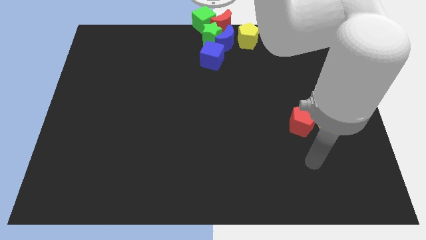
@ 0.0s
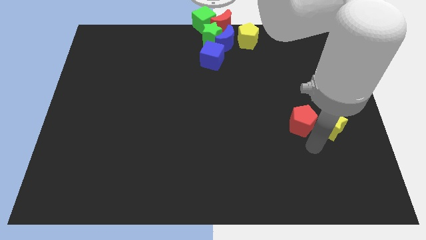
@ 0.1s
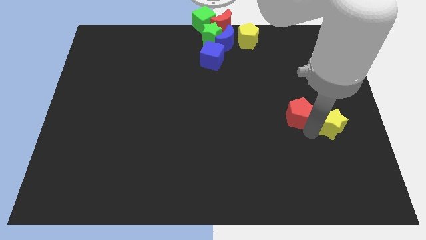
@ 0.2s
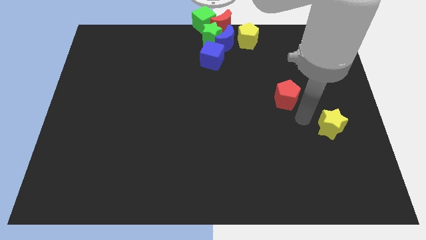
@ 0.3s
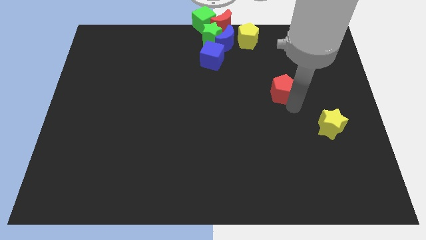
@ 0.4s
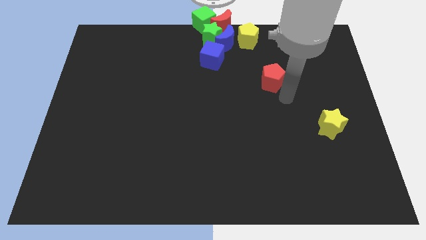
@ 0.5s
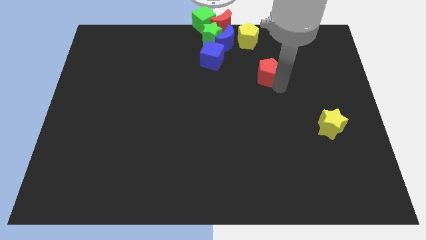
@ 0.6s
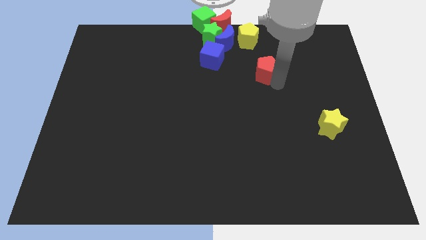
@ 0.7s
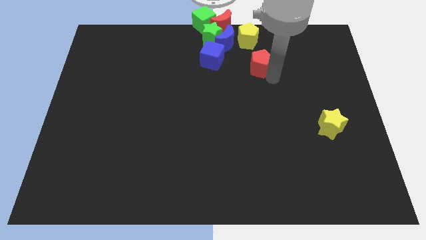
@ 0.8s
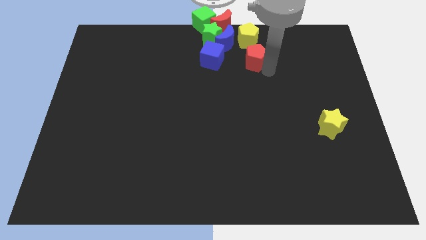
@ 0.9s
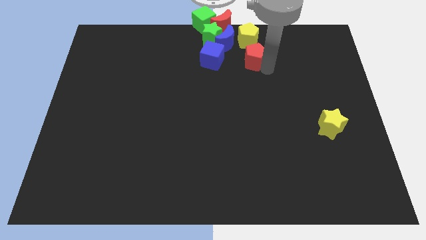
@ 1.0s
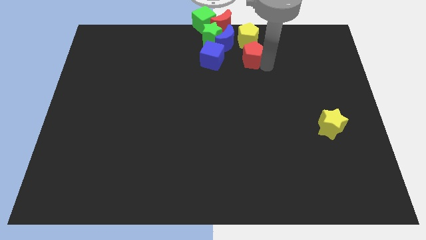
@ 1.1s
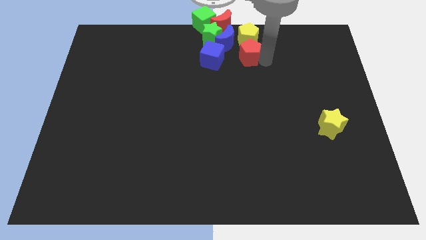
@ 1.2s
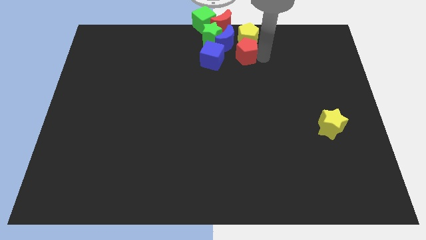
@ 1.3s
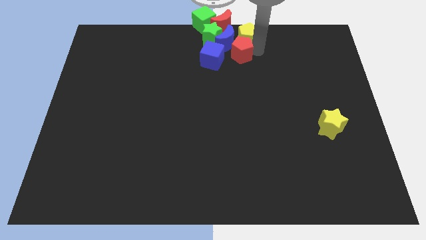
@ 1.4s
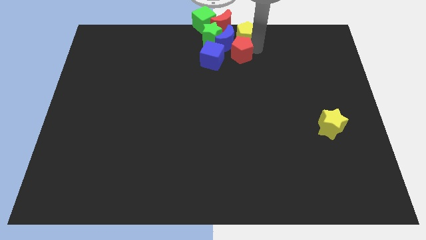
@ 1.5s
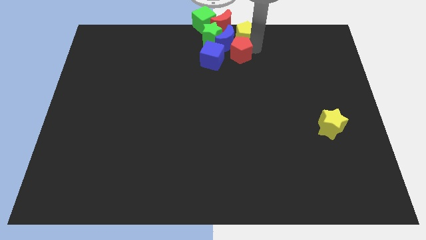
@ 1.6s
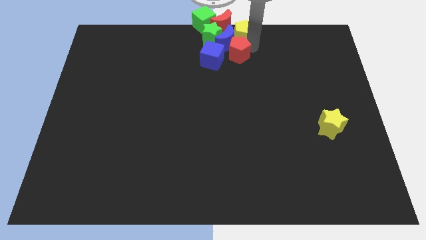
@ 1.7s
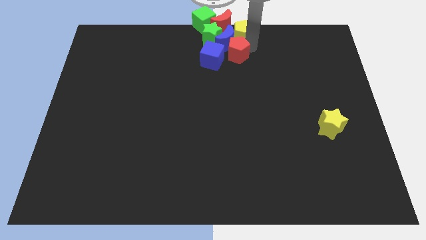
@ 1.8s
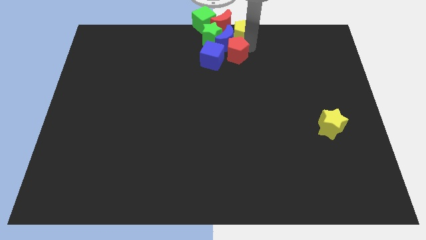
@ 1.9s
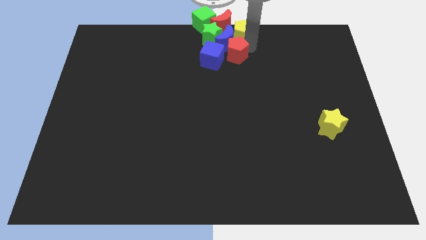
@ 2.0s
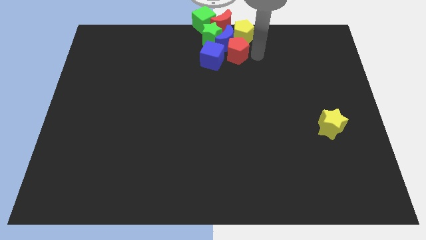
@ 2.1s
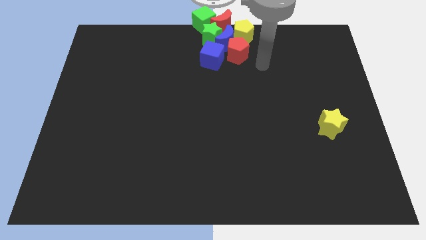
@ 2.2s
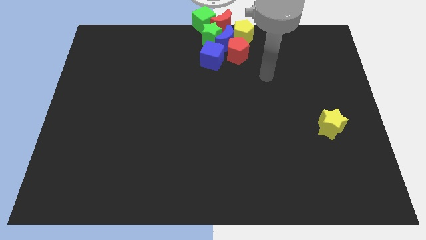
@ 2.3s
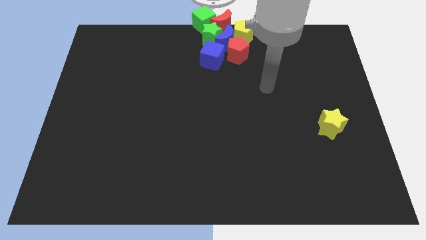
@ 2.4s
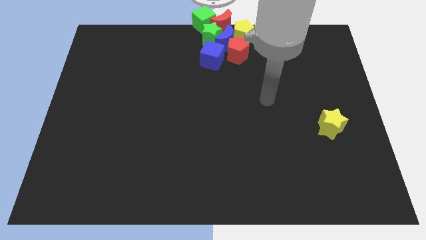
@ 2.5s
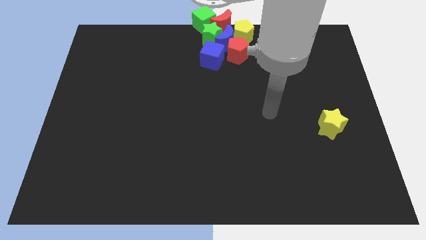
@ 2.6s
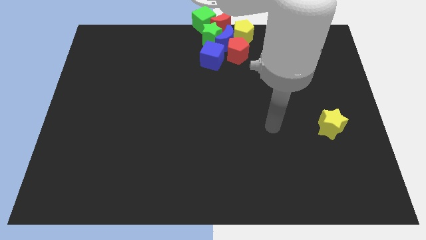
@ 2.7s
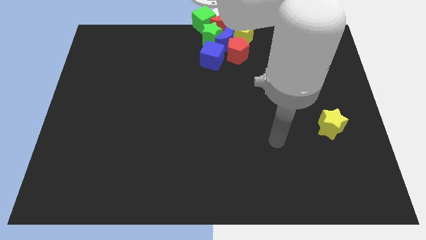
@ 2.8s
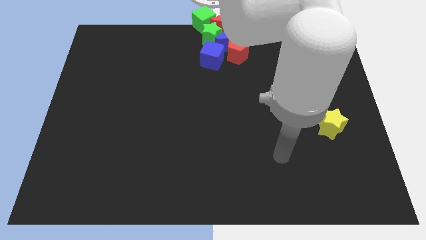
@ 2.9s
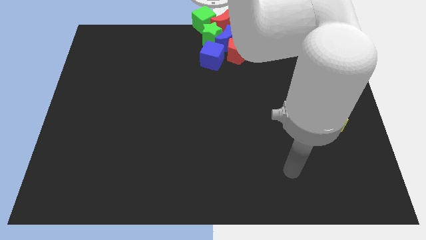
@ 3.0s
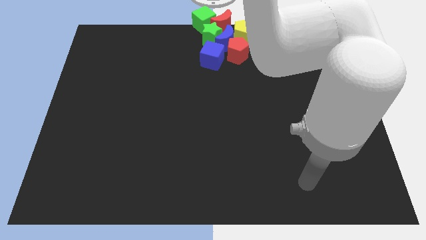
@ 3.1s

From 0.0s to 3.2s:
place the red pentagon at the bottom of the yellow pentagon

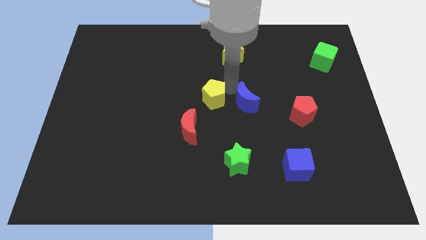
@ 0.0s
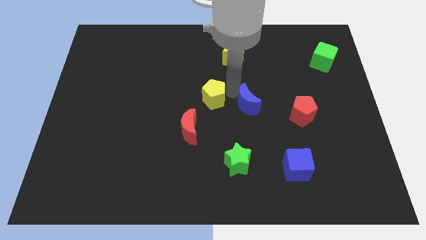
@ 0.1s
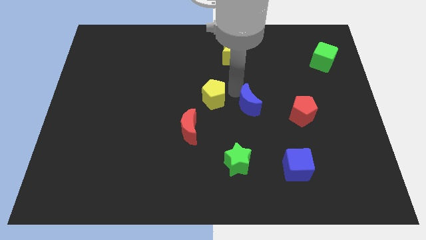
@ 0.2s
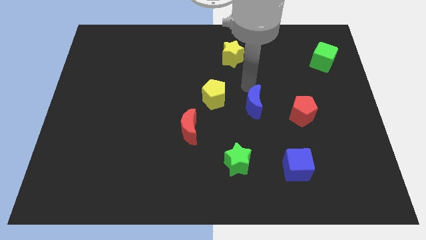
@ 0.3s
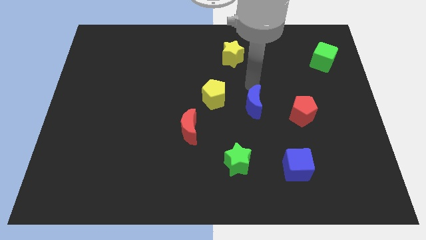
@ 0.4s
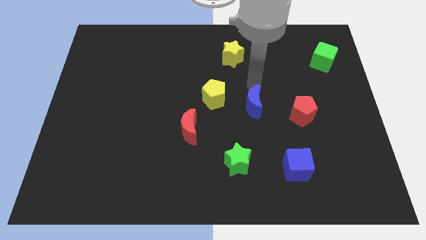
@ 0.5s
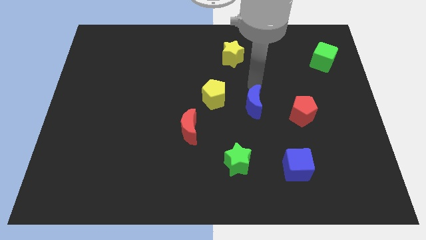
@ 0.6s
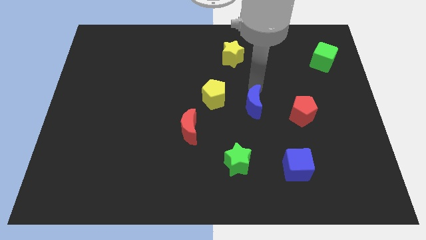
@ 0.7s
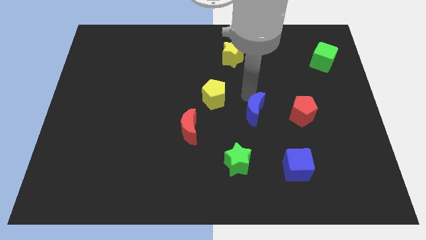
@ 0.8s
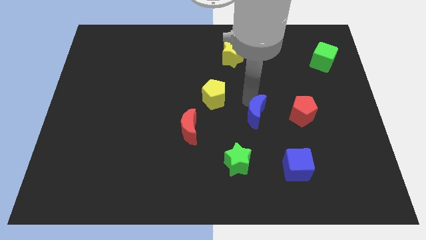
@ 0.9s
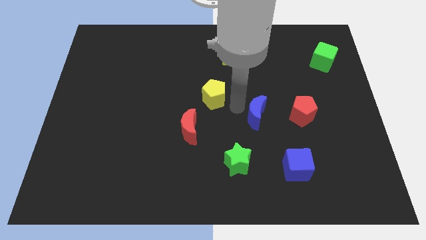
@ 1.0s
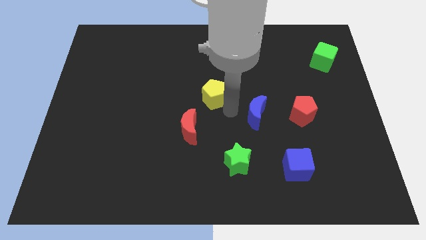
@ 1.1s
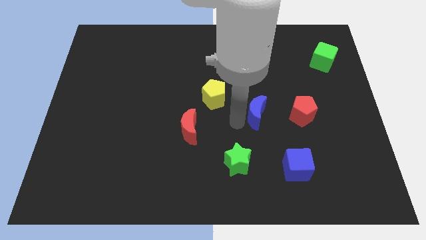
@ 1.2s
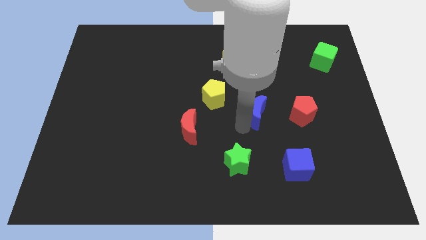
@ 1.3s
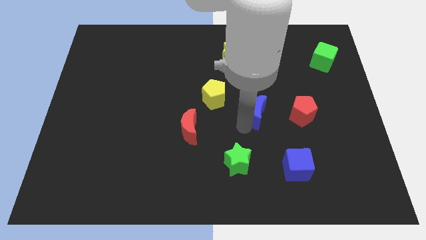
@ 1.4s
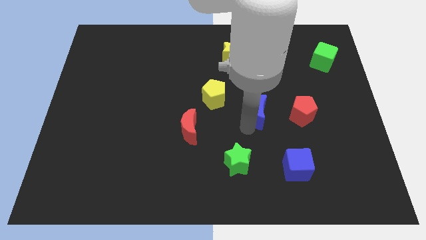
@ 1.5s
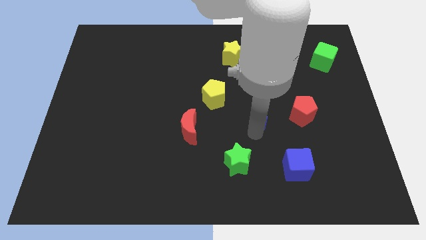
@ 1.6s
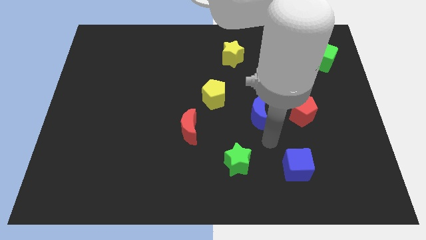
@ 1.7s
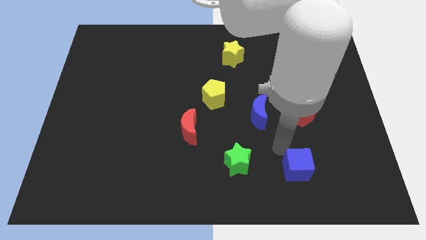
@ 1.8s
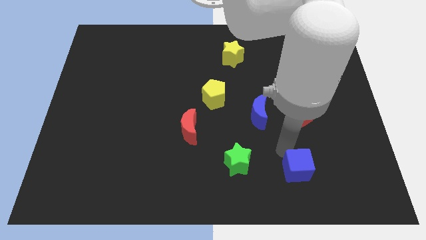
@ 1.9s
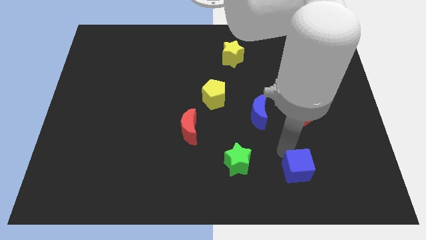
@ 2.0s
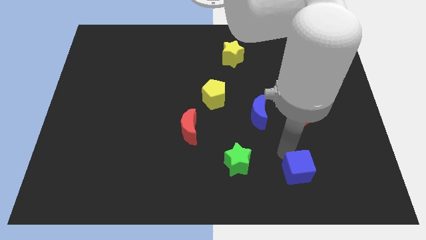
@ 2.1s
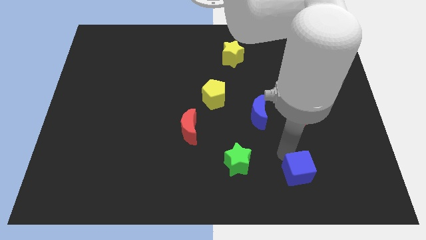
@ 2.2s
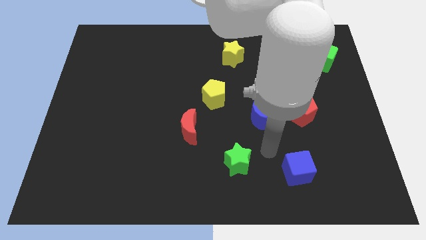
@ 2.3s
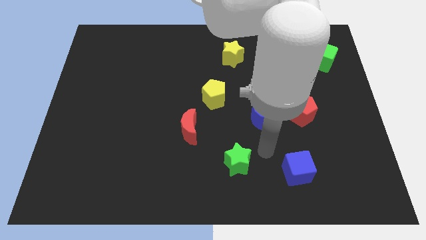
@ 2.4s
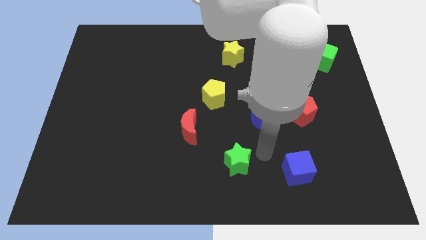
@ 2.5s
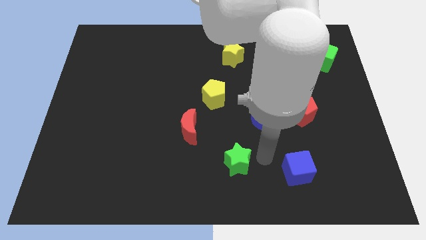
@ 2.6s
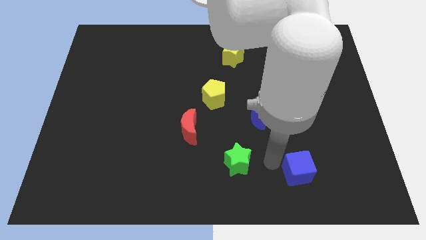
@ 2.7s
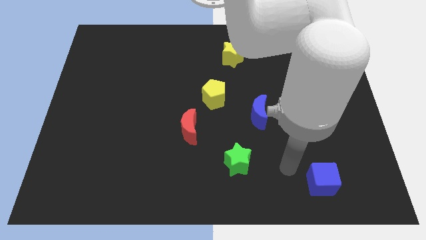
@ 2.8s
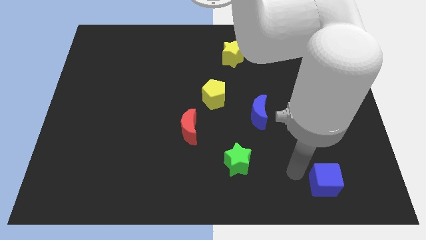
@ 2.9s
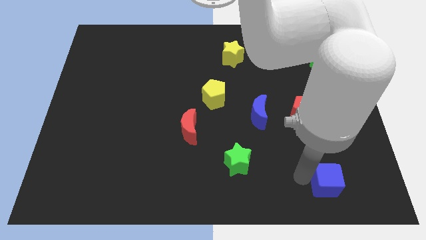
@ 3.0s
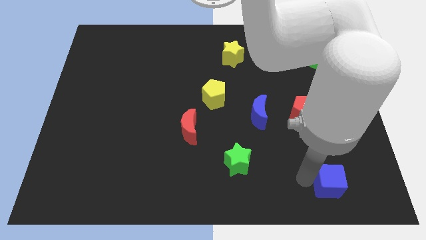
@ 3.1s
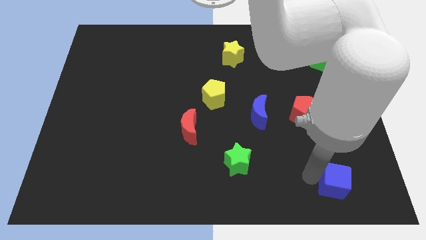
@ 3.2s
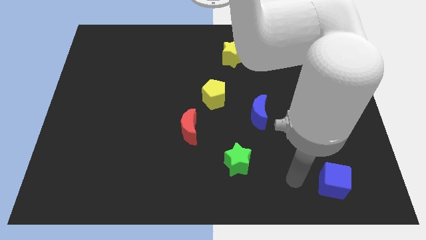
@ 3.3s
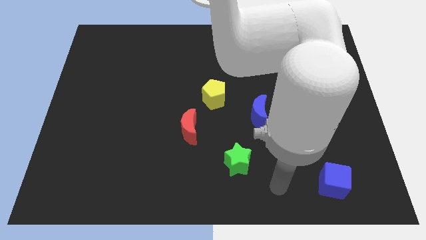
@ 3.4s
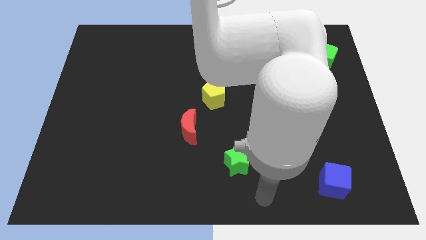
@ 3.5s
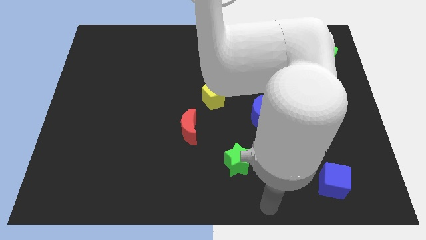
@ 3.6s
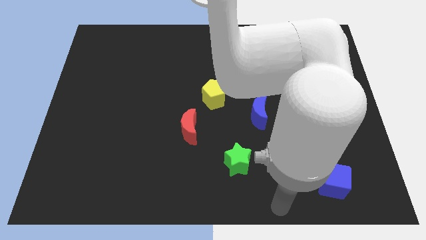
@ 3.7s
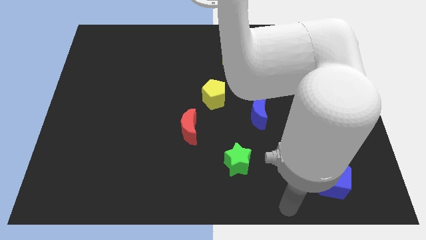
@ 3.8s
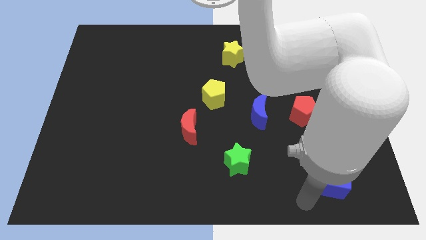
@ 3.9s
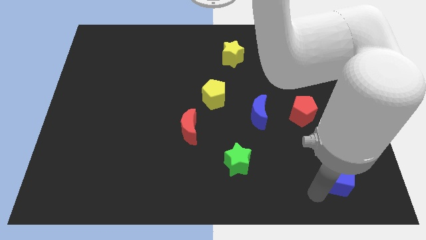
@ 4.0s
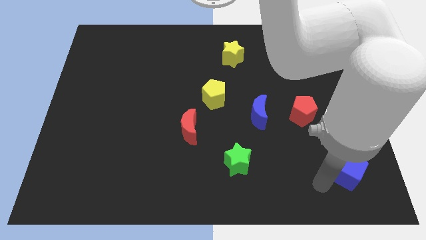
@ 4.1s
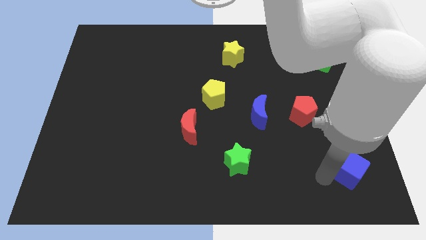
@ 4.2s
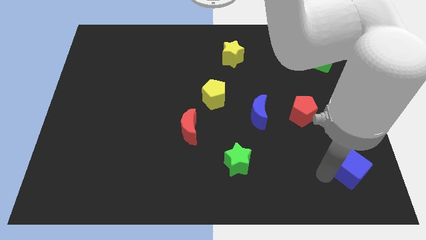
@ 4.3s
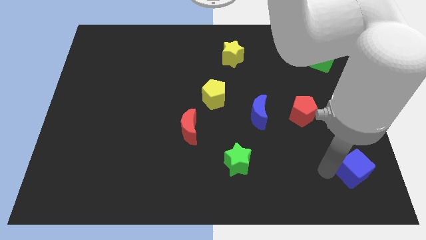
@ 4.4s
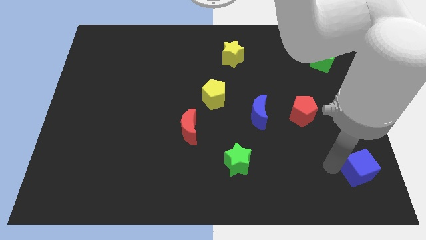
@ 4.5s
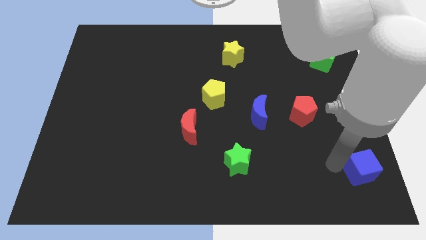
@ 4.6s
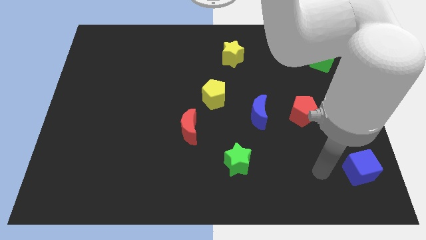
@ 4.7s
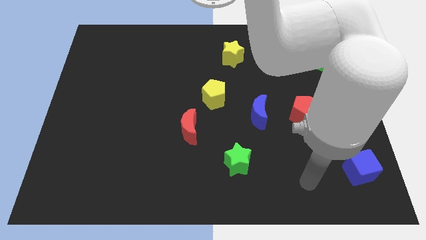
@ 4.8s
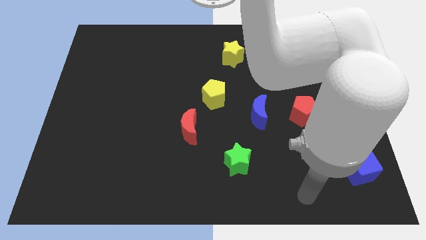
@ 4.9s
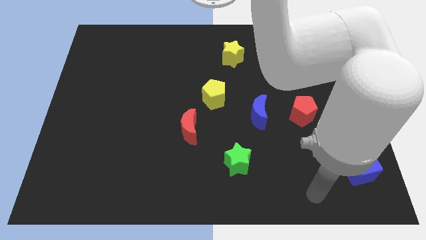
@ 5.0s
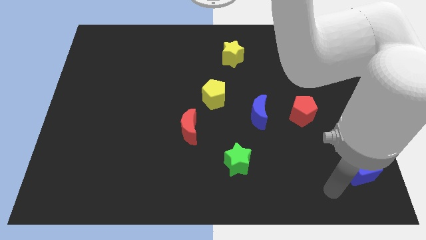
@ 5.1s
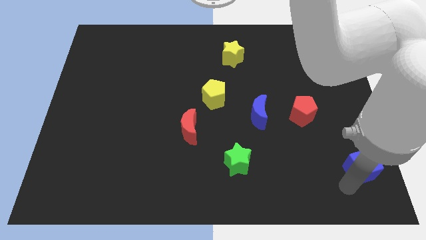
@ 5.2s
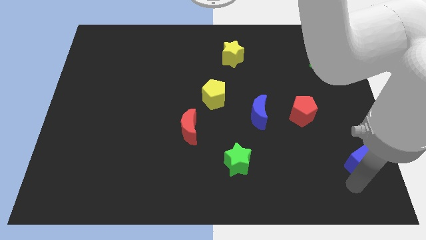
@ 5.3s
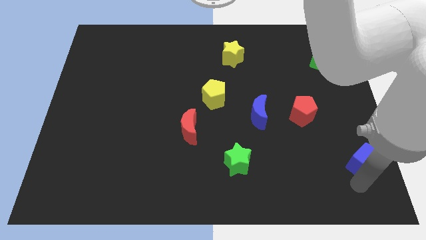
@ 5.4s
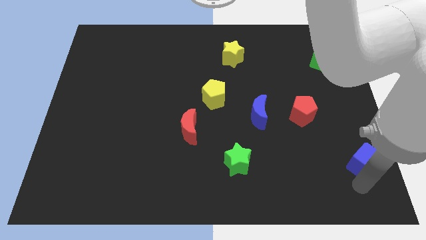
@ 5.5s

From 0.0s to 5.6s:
move the blue cube towards the bottom right side of the board

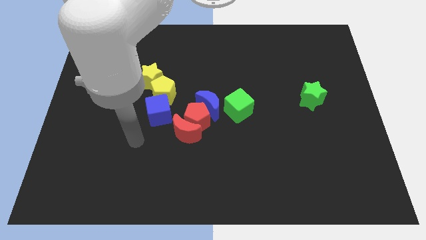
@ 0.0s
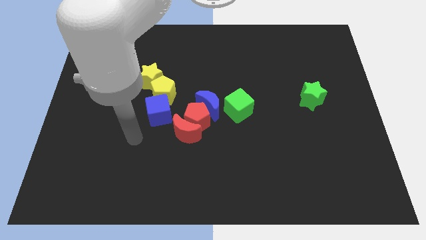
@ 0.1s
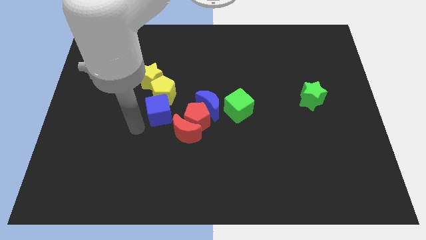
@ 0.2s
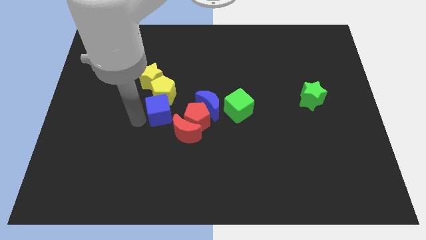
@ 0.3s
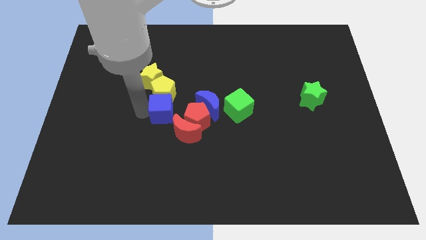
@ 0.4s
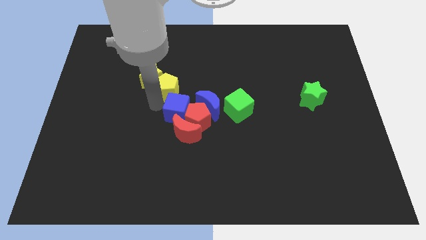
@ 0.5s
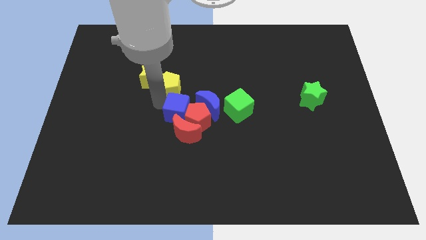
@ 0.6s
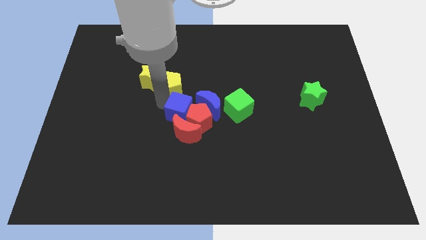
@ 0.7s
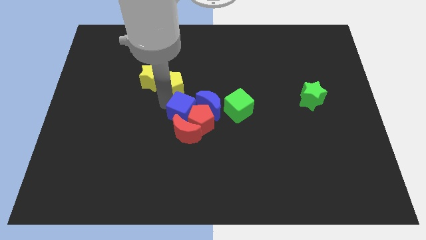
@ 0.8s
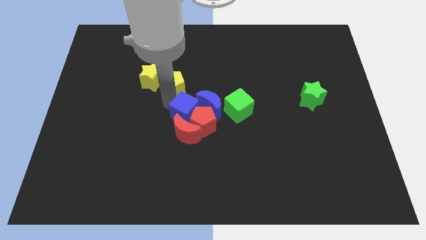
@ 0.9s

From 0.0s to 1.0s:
push the blue cube into the red pentagon
